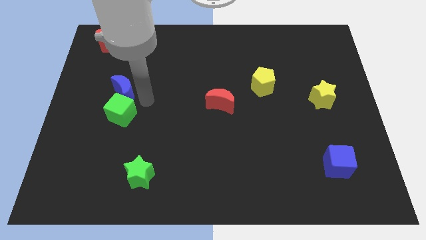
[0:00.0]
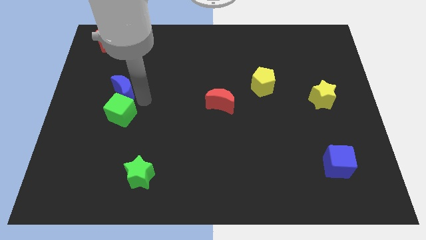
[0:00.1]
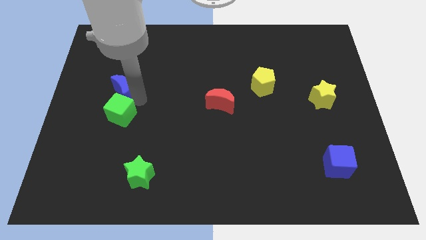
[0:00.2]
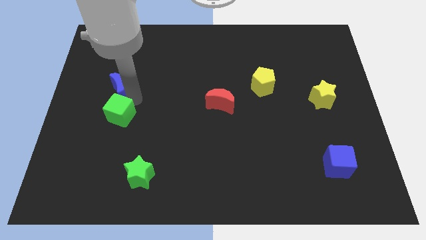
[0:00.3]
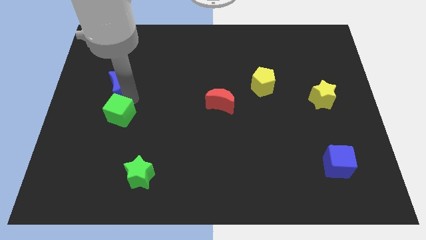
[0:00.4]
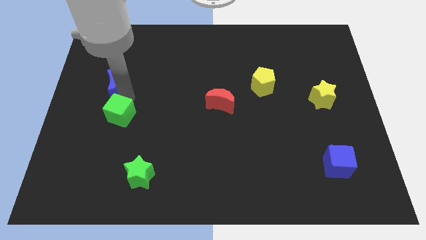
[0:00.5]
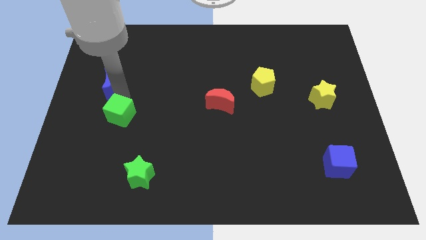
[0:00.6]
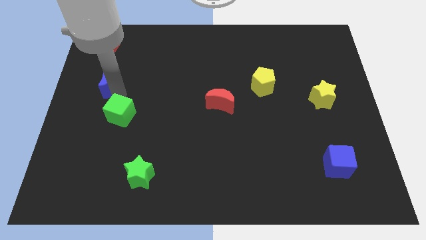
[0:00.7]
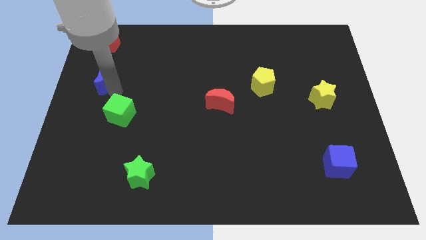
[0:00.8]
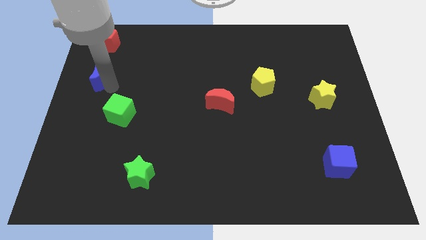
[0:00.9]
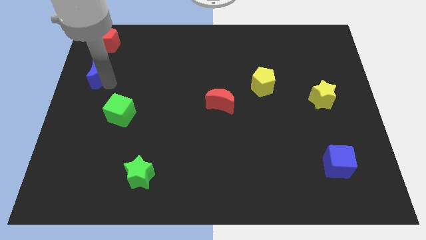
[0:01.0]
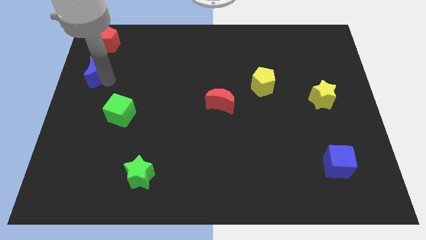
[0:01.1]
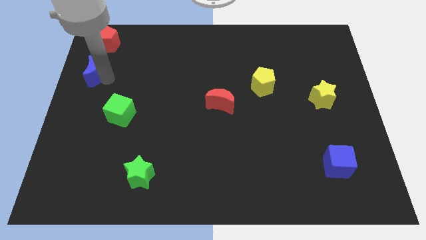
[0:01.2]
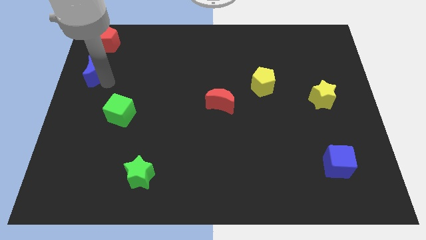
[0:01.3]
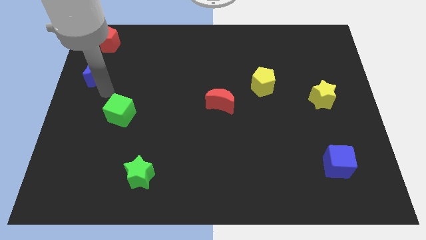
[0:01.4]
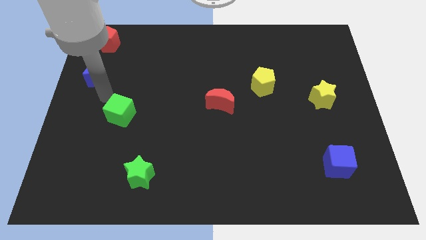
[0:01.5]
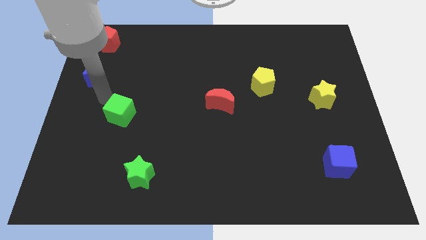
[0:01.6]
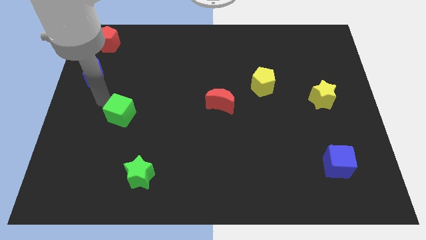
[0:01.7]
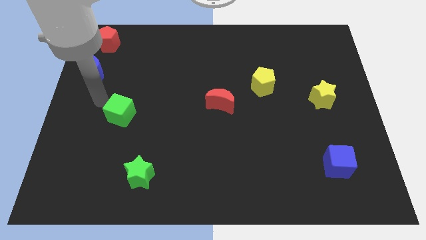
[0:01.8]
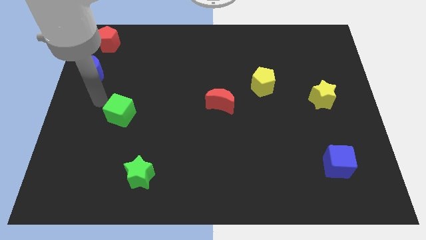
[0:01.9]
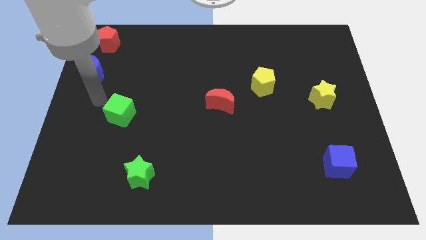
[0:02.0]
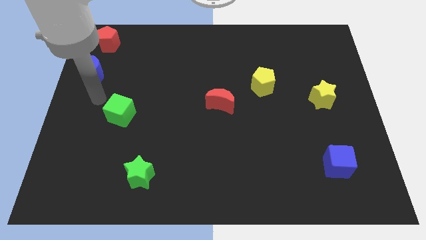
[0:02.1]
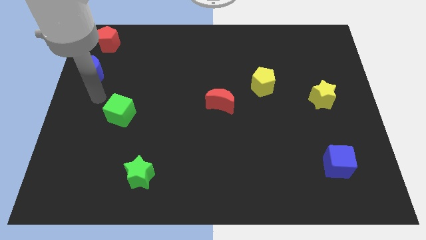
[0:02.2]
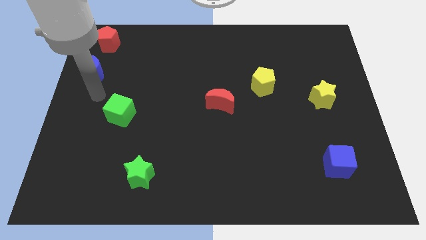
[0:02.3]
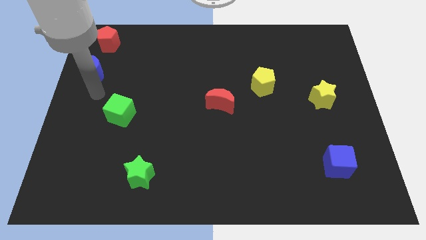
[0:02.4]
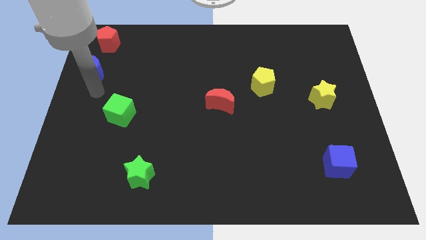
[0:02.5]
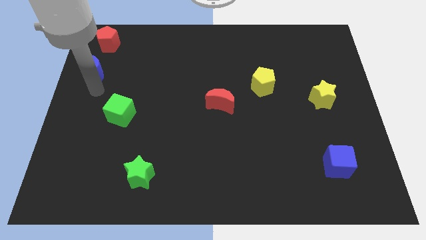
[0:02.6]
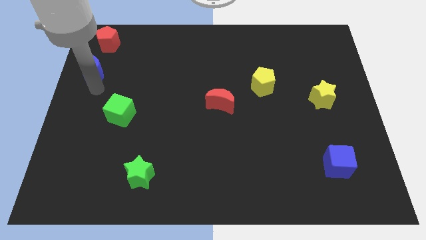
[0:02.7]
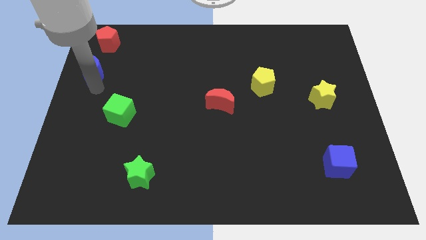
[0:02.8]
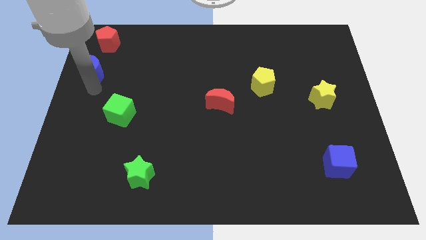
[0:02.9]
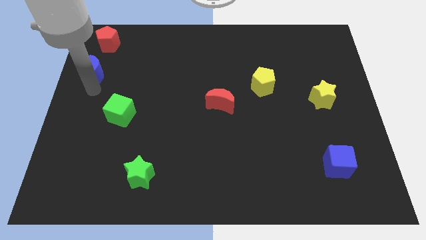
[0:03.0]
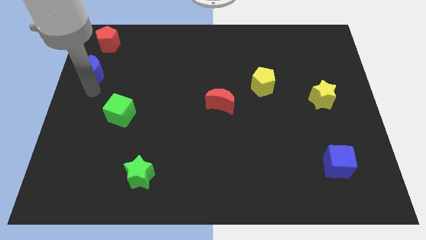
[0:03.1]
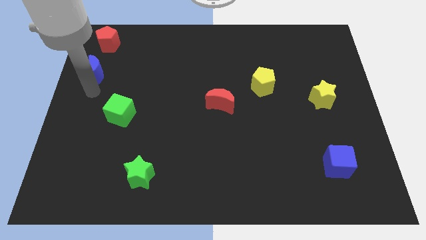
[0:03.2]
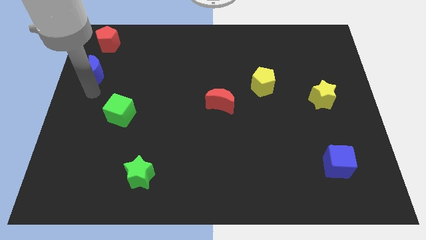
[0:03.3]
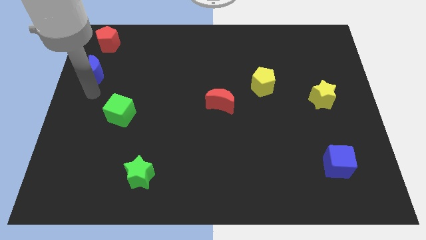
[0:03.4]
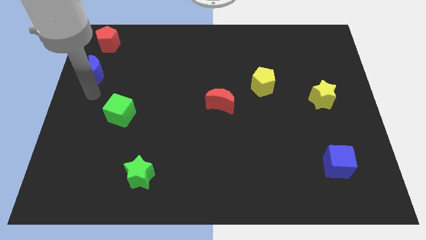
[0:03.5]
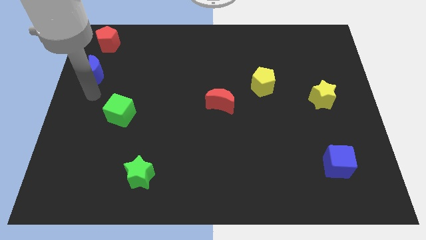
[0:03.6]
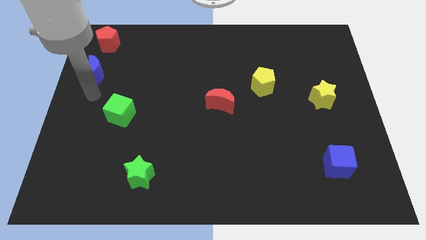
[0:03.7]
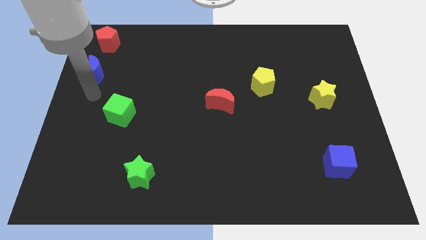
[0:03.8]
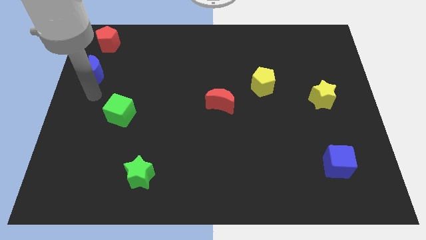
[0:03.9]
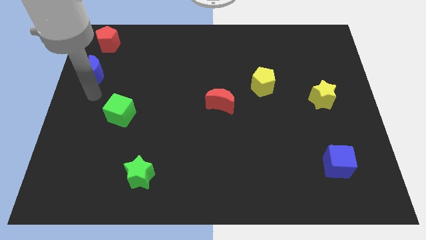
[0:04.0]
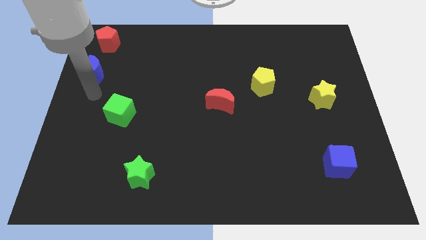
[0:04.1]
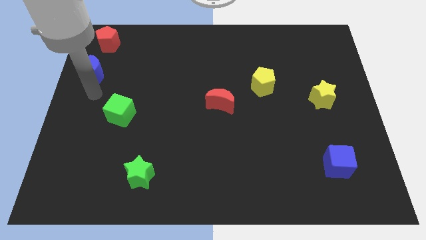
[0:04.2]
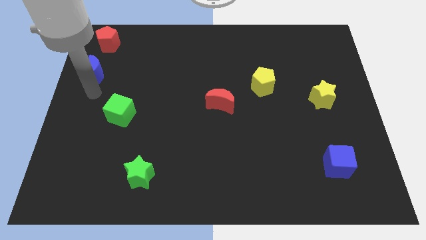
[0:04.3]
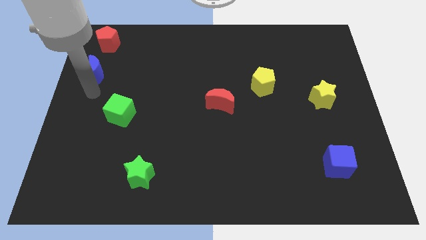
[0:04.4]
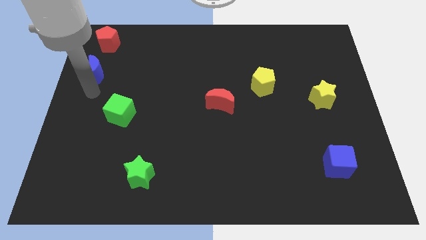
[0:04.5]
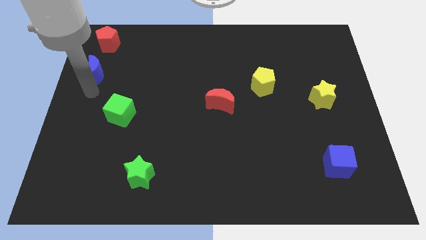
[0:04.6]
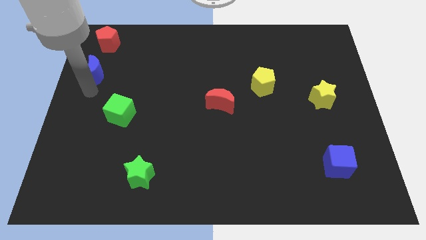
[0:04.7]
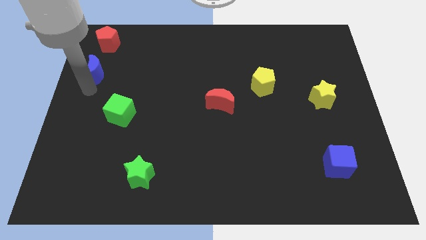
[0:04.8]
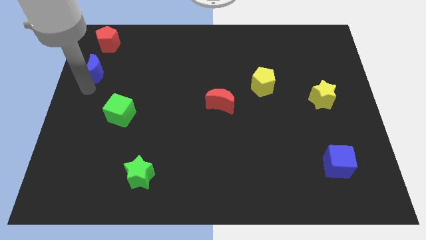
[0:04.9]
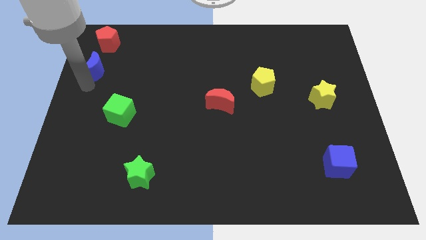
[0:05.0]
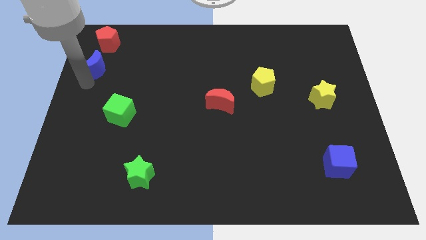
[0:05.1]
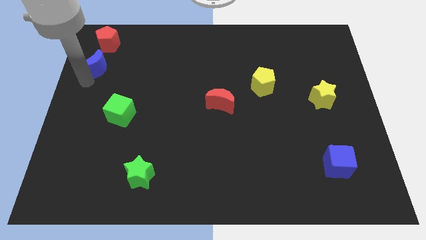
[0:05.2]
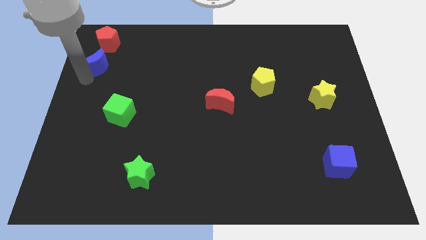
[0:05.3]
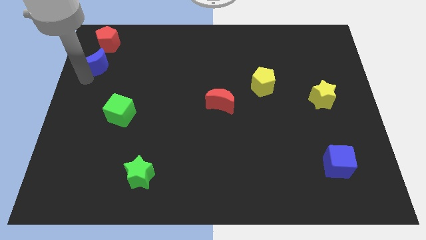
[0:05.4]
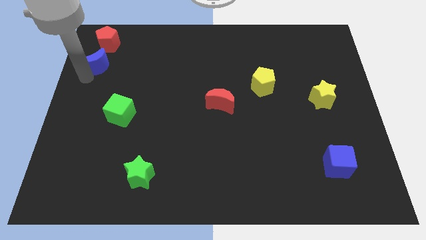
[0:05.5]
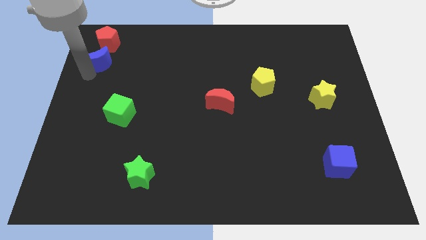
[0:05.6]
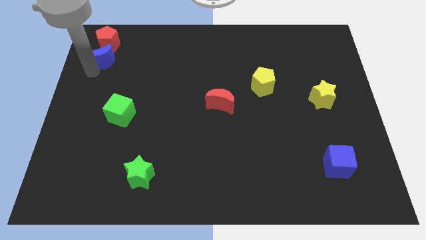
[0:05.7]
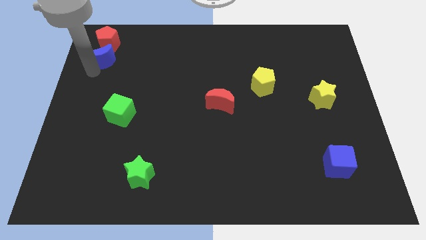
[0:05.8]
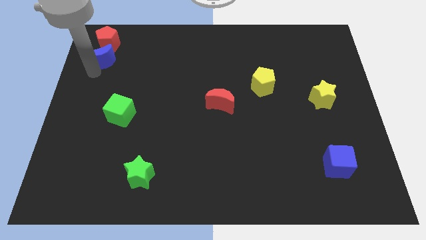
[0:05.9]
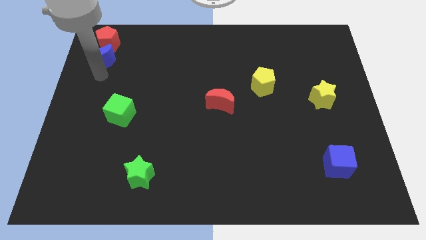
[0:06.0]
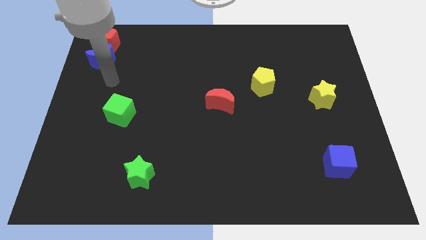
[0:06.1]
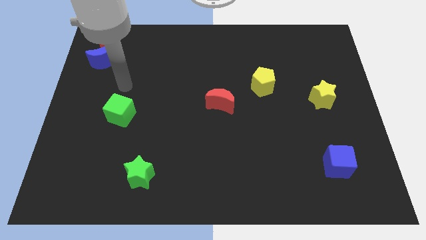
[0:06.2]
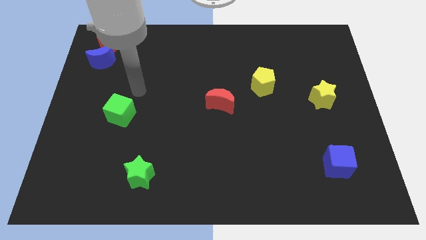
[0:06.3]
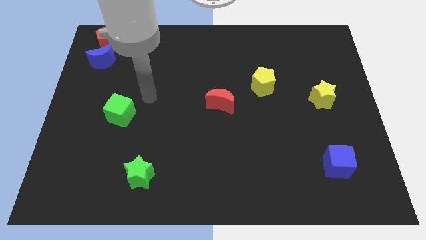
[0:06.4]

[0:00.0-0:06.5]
place blue moon below the red pentagon

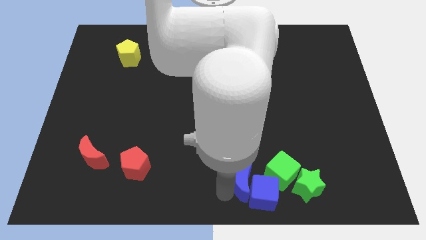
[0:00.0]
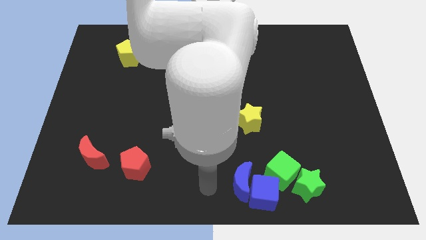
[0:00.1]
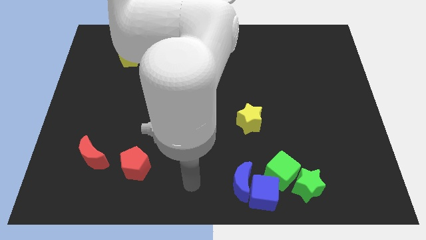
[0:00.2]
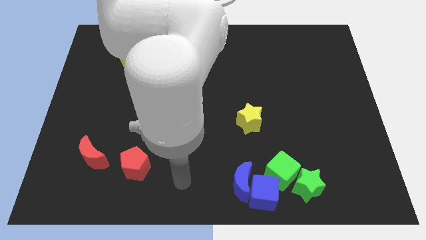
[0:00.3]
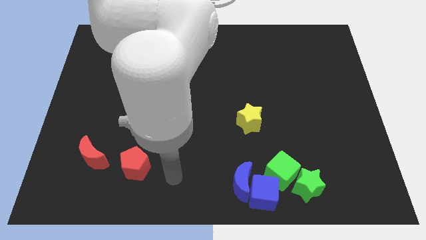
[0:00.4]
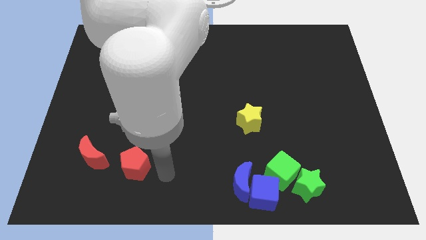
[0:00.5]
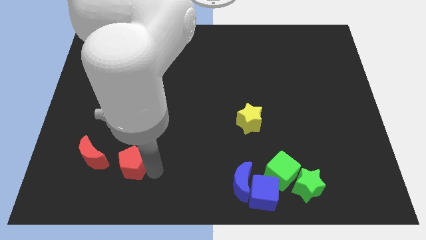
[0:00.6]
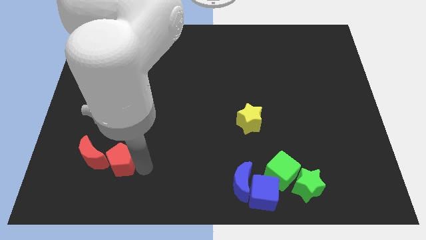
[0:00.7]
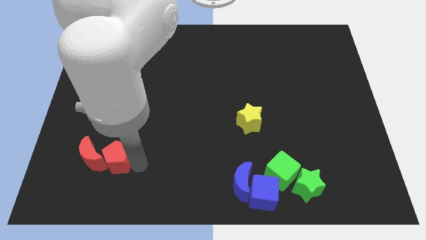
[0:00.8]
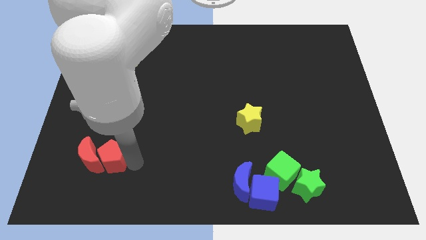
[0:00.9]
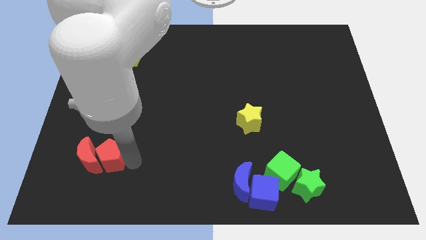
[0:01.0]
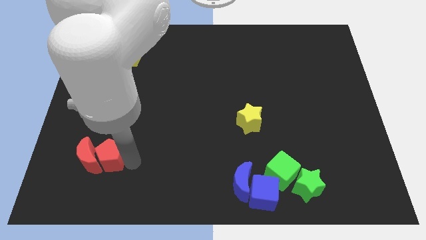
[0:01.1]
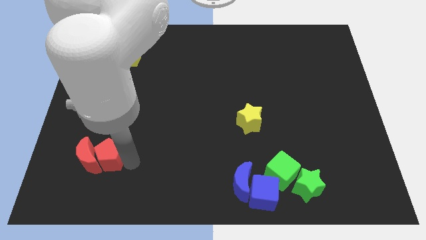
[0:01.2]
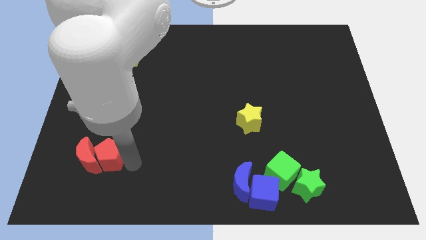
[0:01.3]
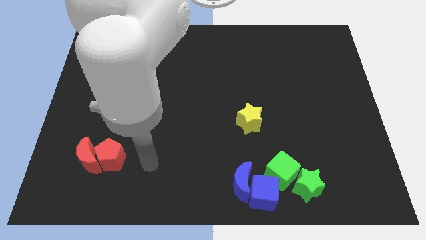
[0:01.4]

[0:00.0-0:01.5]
slide the red pentagon into the red crescent

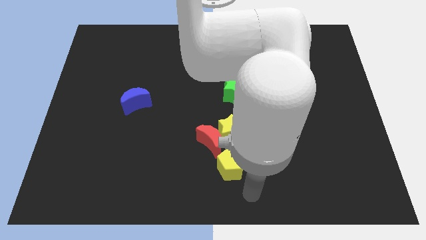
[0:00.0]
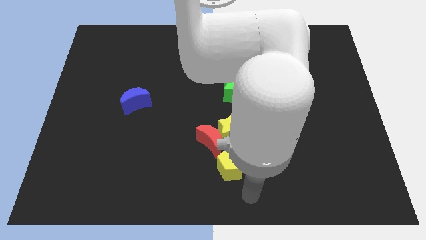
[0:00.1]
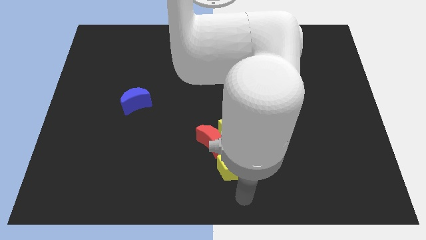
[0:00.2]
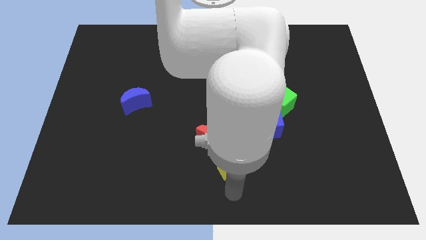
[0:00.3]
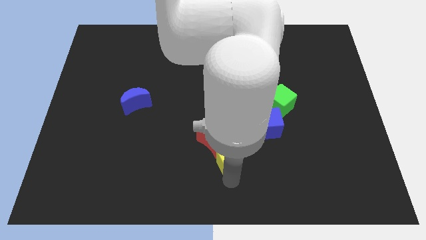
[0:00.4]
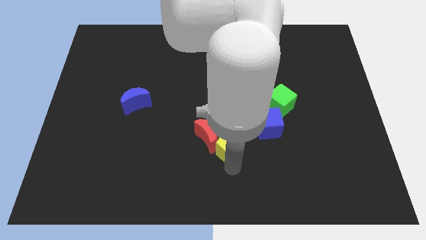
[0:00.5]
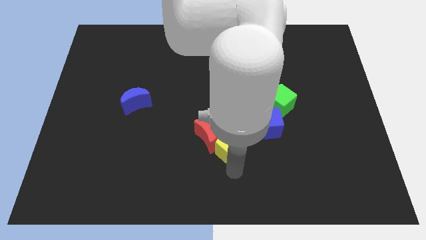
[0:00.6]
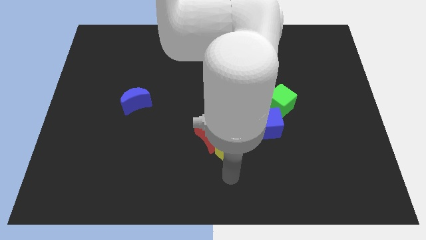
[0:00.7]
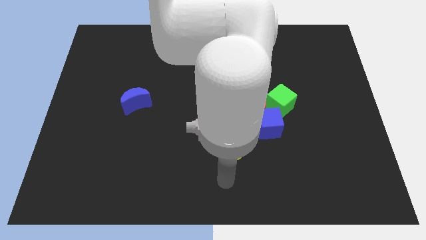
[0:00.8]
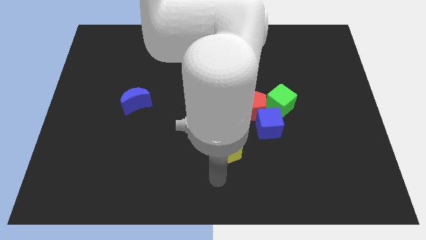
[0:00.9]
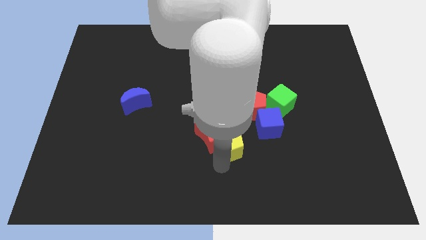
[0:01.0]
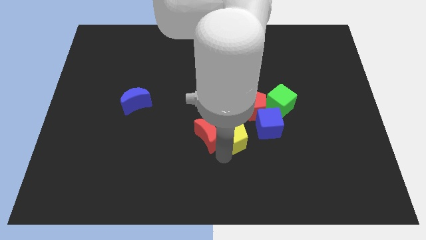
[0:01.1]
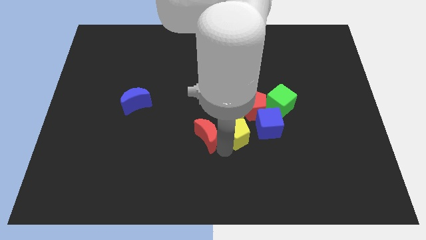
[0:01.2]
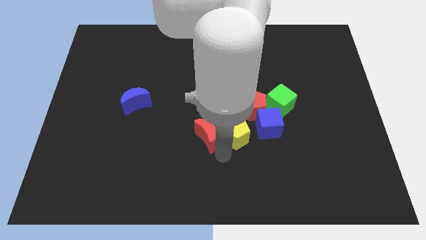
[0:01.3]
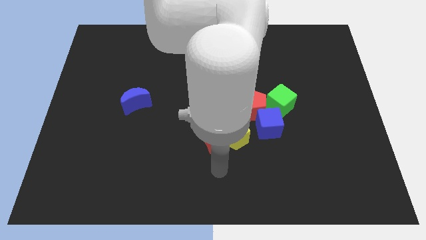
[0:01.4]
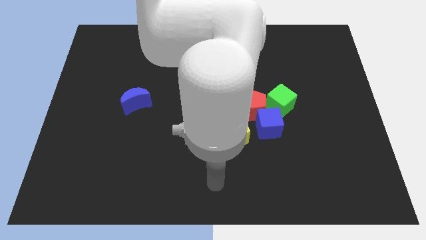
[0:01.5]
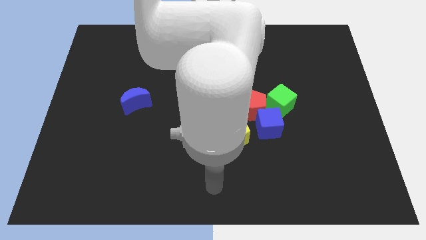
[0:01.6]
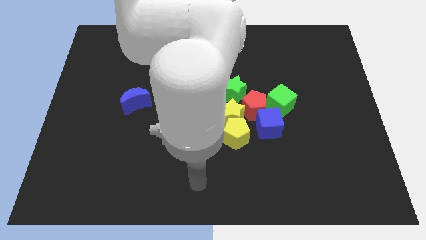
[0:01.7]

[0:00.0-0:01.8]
move the yellow star to the left side of the red pentagon with the yellow pentagon
